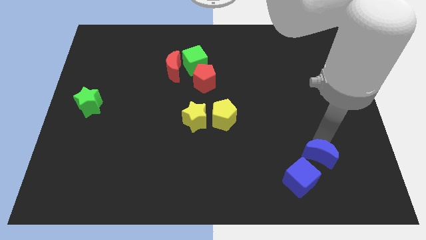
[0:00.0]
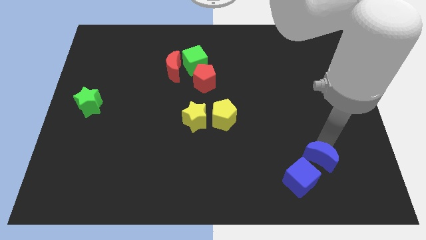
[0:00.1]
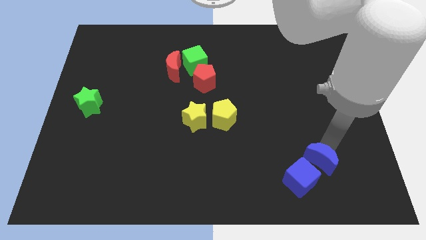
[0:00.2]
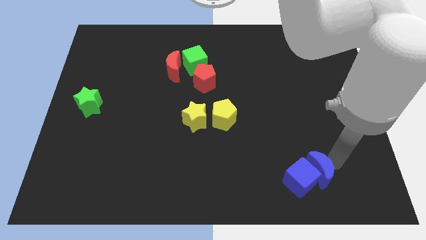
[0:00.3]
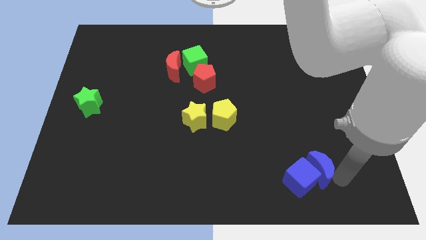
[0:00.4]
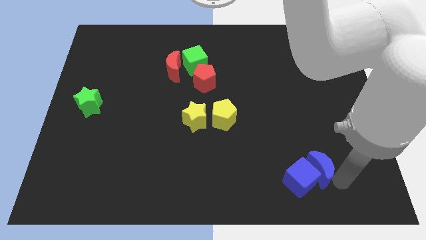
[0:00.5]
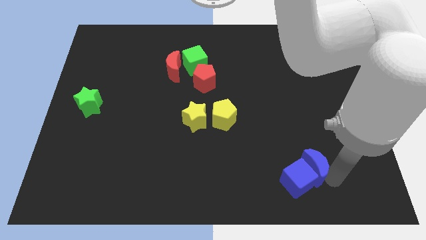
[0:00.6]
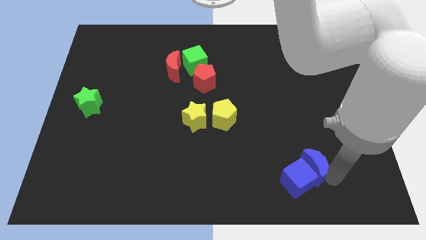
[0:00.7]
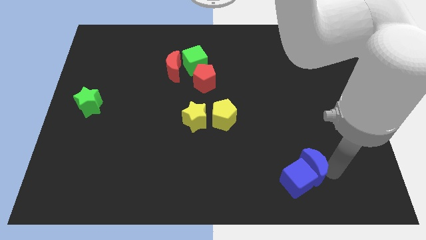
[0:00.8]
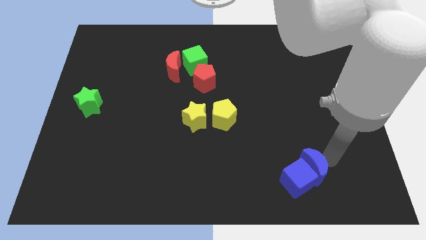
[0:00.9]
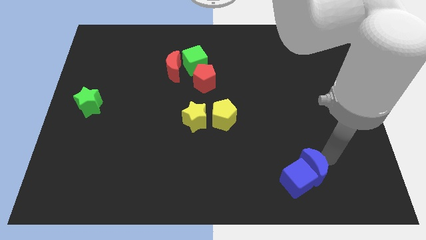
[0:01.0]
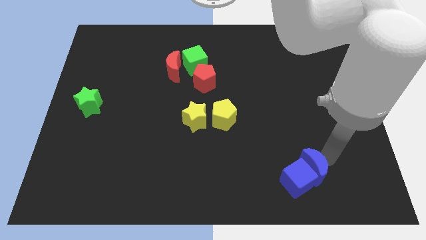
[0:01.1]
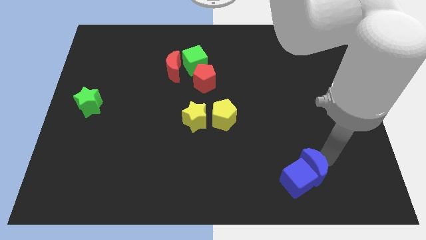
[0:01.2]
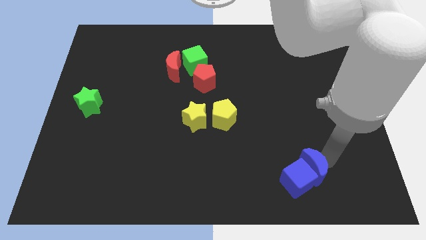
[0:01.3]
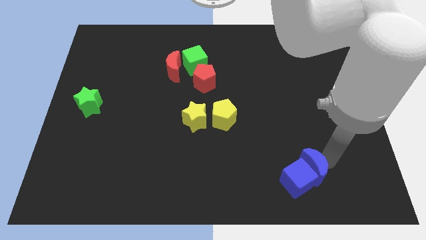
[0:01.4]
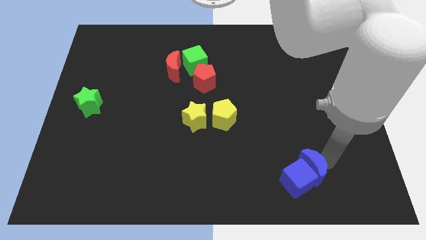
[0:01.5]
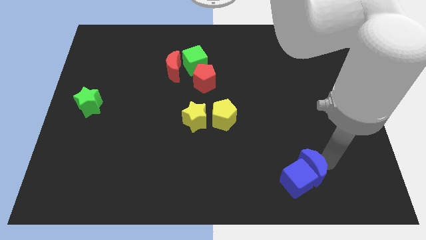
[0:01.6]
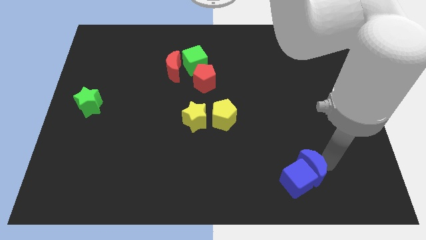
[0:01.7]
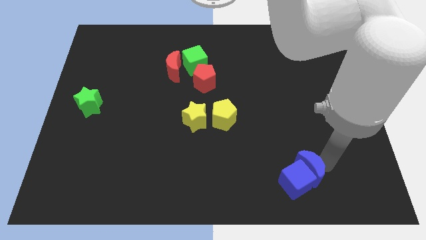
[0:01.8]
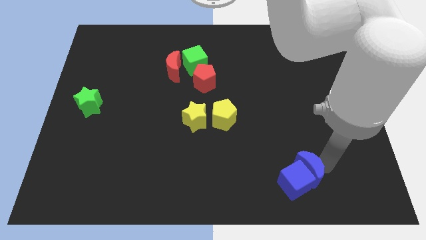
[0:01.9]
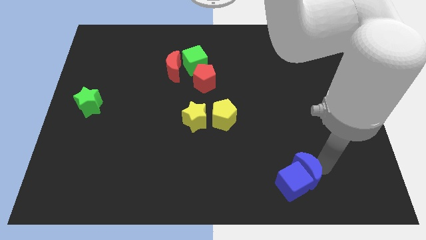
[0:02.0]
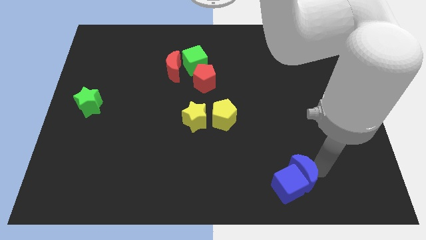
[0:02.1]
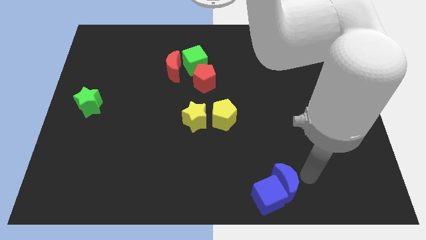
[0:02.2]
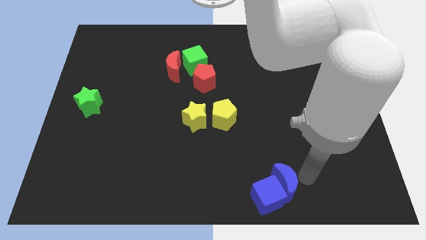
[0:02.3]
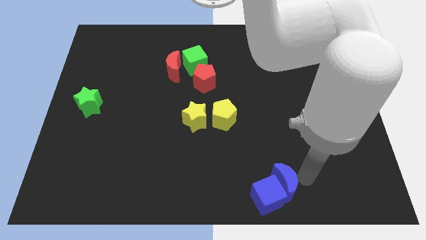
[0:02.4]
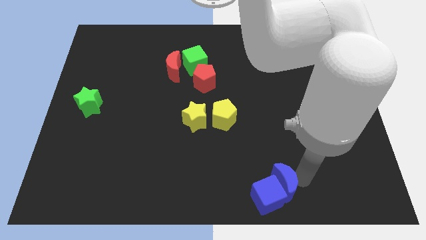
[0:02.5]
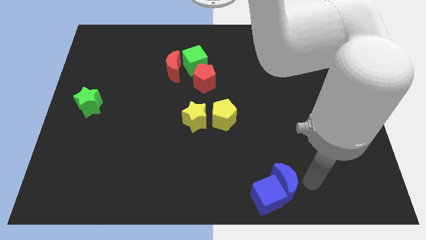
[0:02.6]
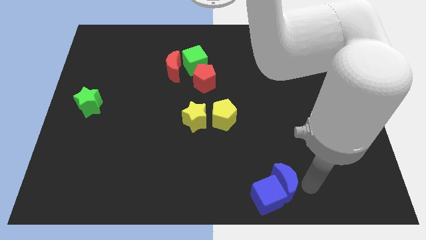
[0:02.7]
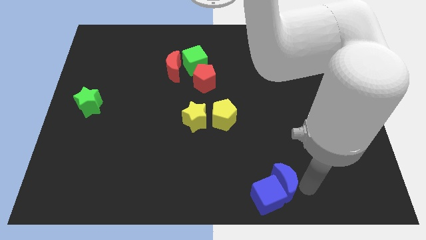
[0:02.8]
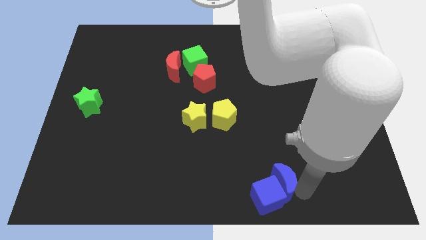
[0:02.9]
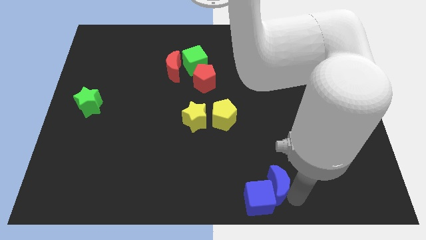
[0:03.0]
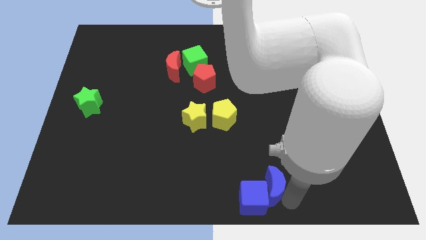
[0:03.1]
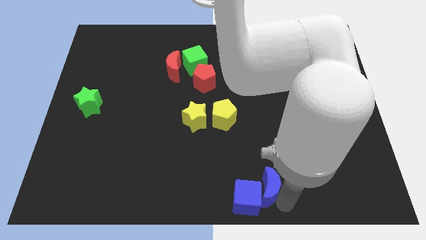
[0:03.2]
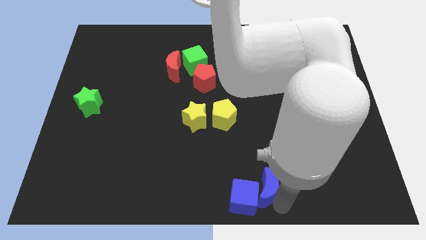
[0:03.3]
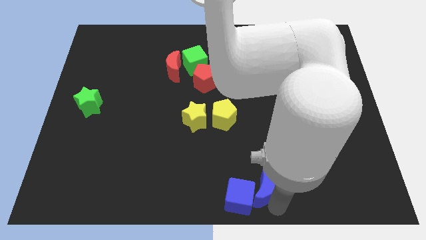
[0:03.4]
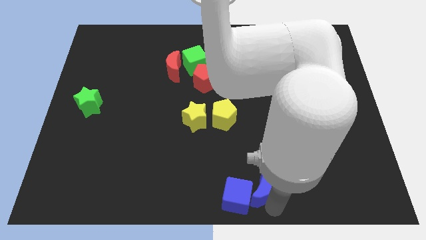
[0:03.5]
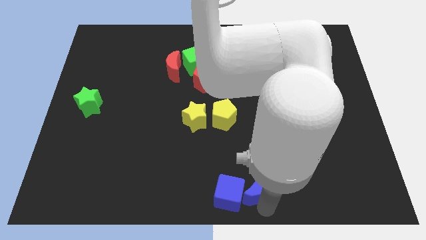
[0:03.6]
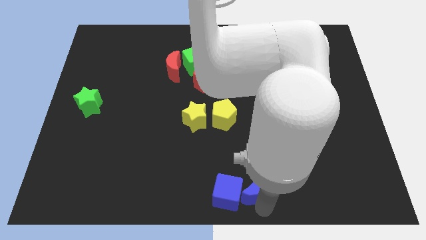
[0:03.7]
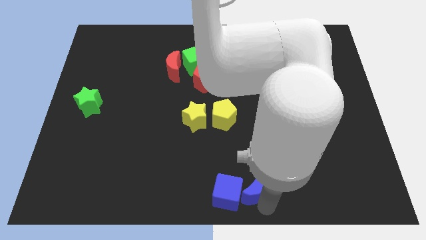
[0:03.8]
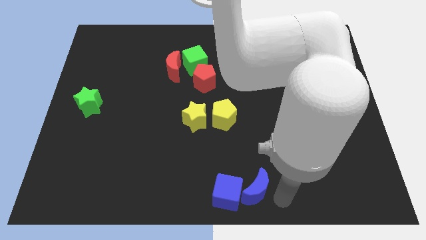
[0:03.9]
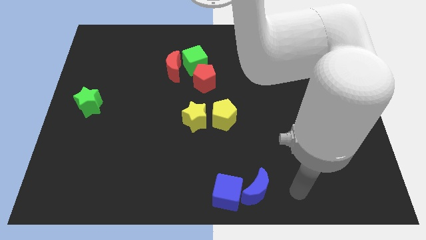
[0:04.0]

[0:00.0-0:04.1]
place blue cube and blue moon to the bottom center of the board

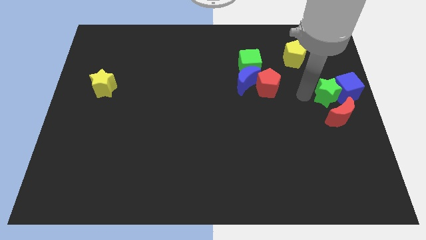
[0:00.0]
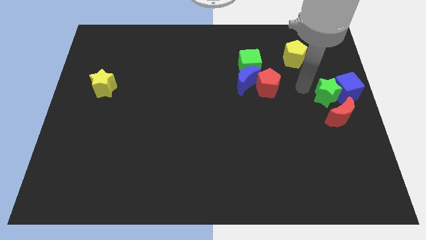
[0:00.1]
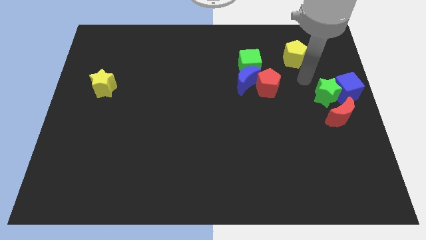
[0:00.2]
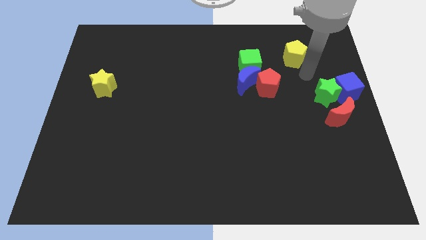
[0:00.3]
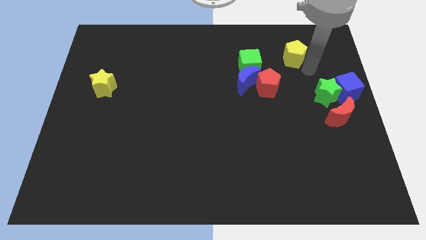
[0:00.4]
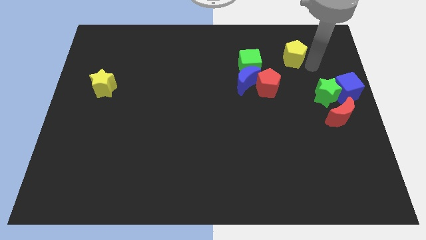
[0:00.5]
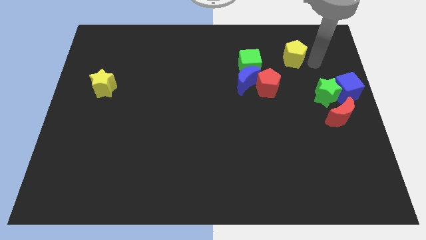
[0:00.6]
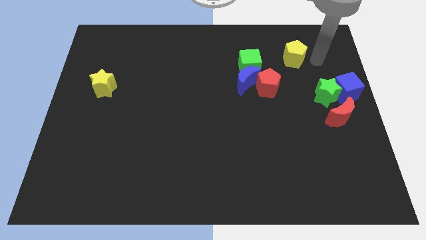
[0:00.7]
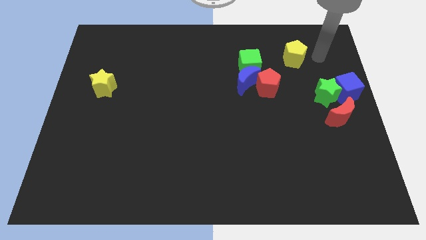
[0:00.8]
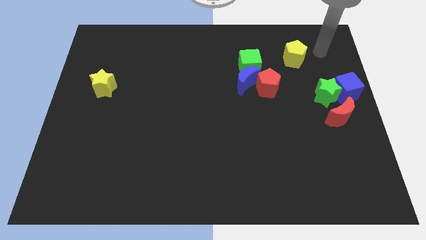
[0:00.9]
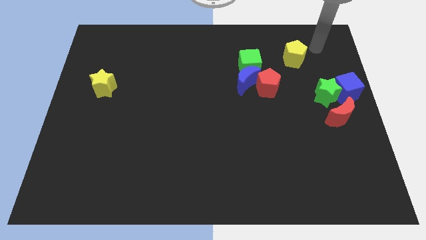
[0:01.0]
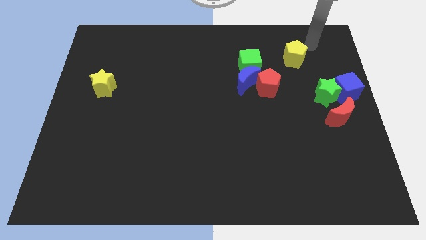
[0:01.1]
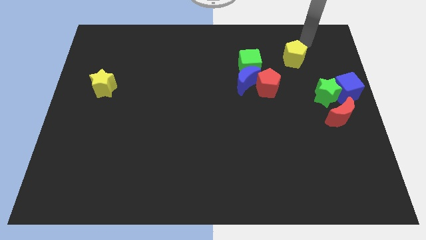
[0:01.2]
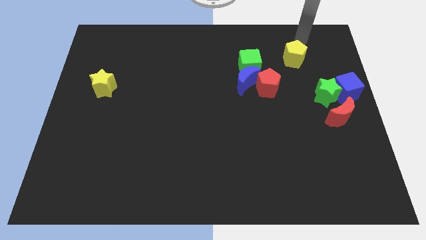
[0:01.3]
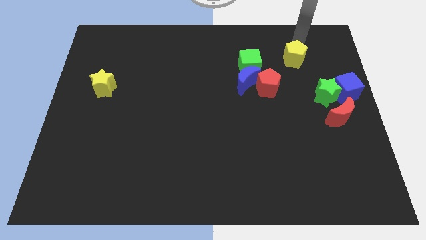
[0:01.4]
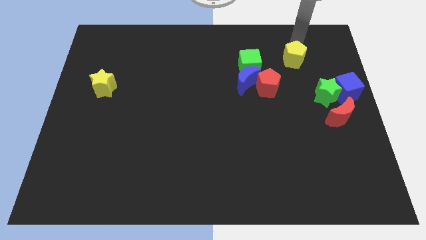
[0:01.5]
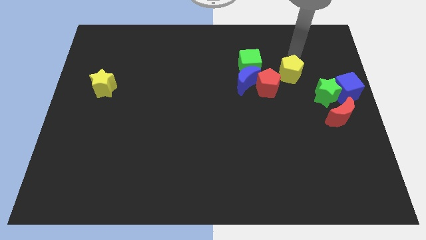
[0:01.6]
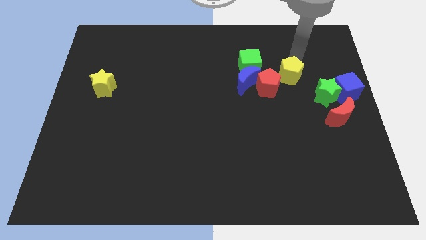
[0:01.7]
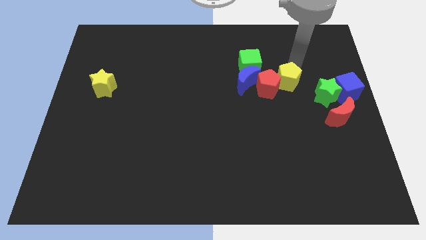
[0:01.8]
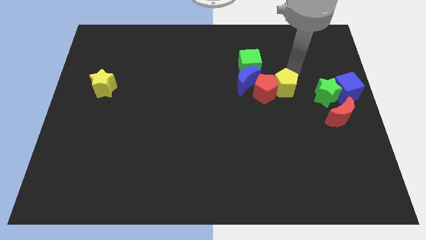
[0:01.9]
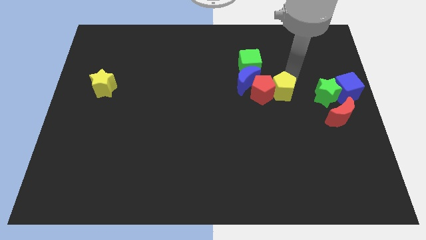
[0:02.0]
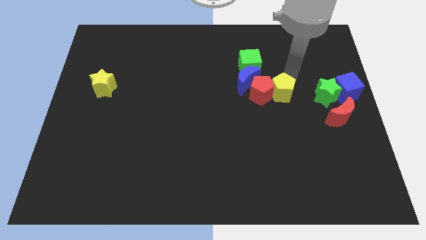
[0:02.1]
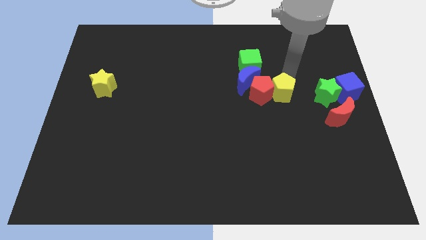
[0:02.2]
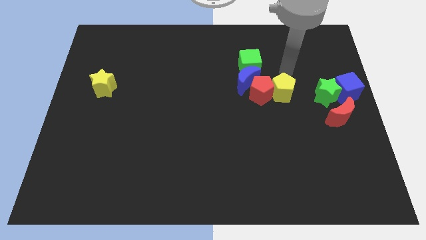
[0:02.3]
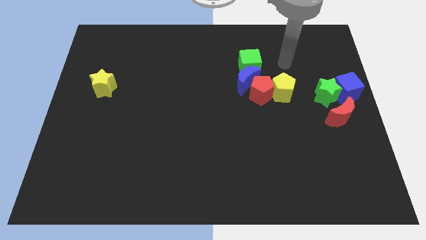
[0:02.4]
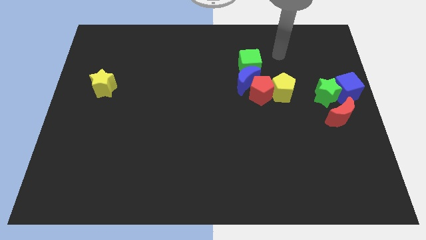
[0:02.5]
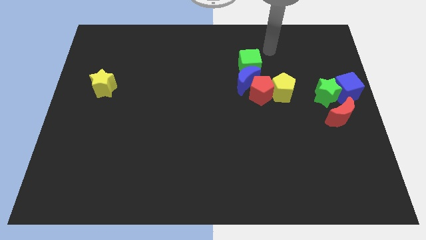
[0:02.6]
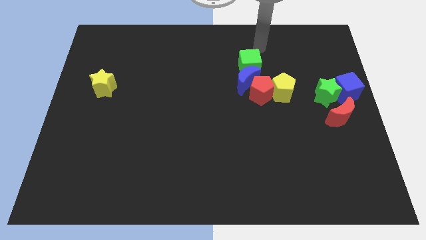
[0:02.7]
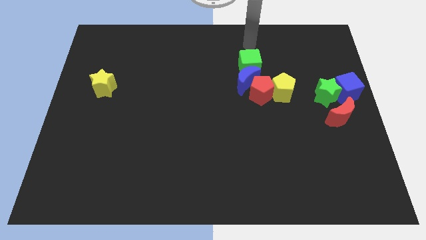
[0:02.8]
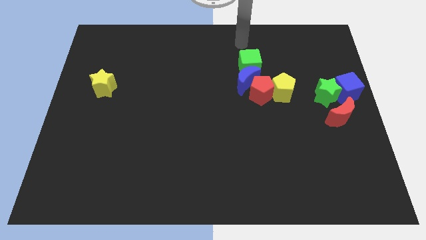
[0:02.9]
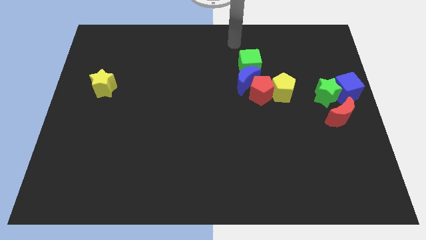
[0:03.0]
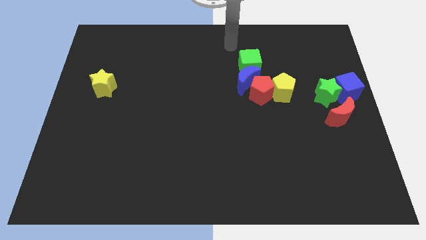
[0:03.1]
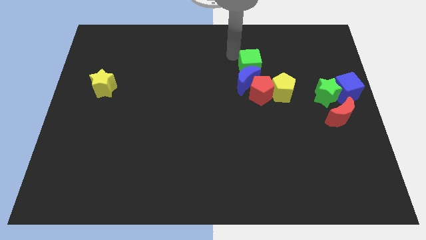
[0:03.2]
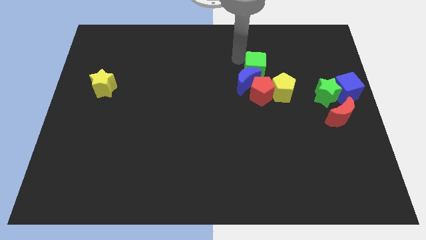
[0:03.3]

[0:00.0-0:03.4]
push the yellow pentagon to the right side of the red pentagon

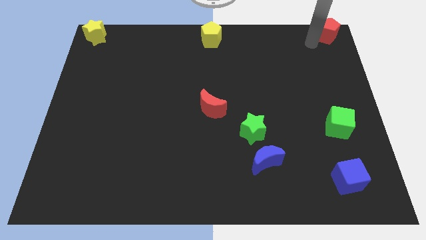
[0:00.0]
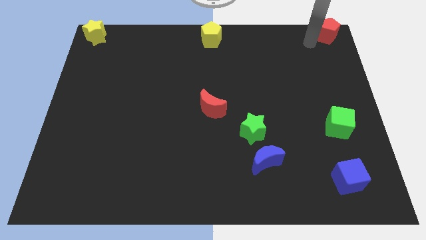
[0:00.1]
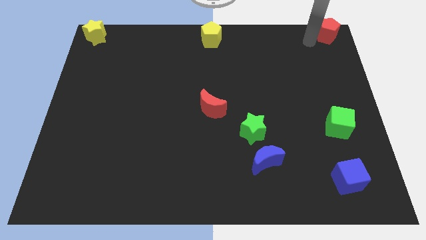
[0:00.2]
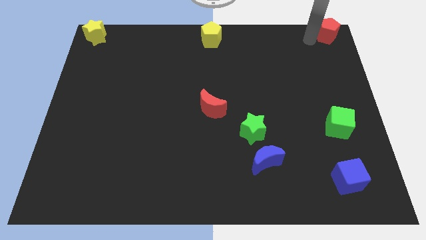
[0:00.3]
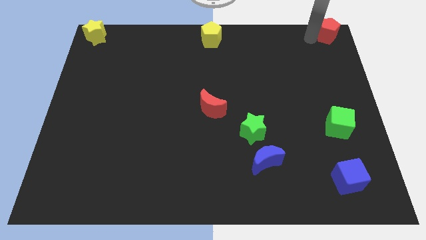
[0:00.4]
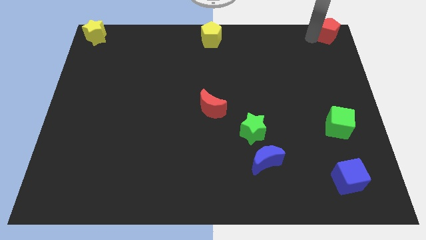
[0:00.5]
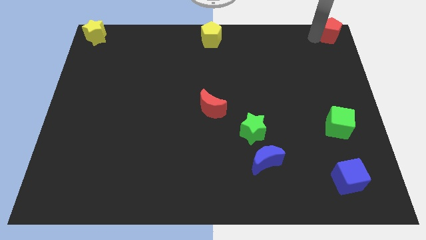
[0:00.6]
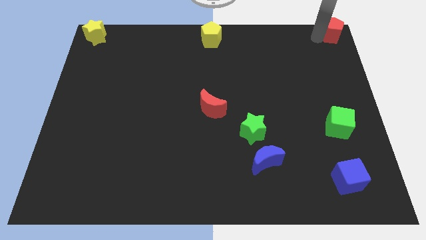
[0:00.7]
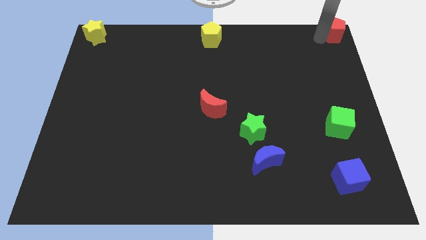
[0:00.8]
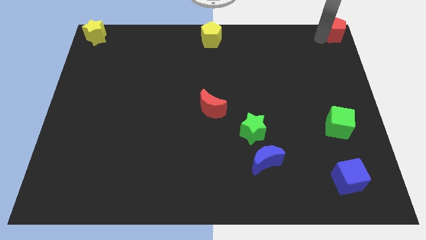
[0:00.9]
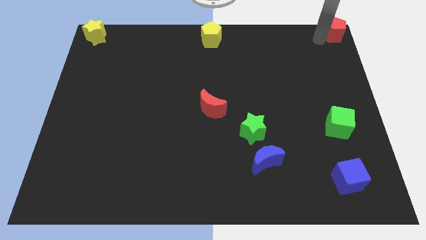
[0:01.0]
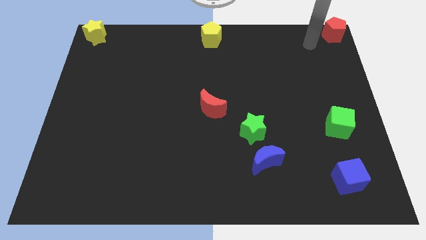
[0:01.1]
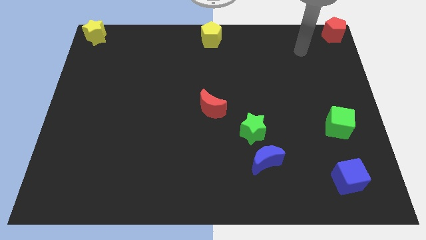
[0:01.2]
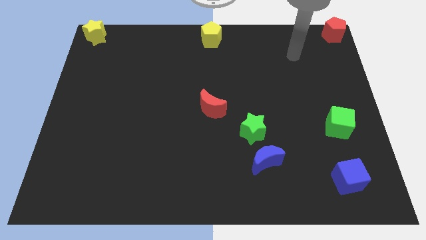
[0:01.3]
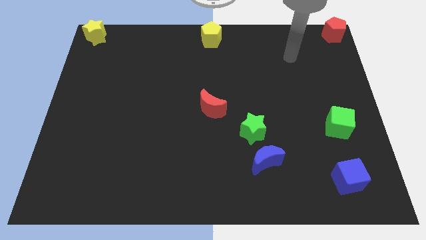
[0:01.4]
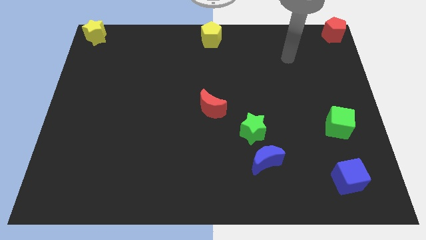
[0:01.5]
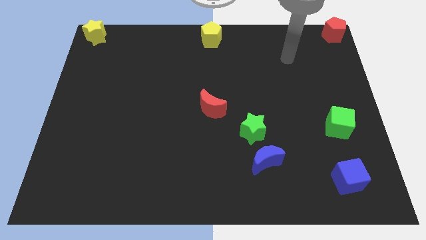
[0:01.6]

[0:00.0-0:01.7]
push the red pentagon slightly towards the top right corner of the board
